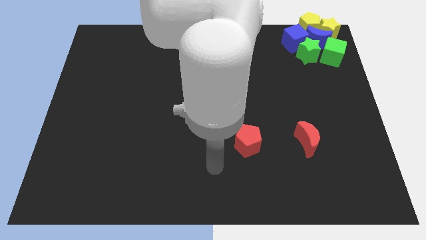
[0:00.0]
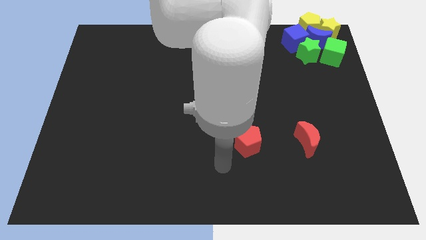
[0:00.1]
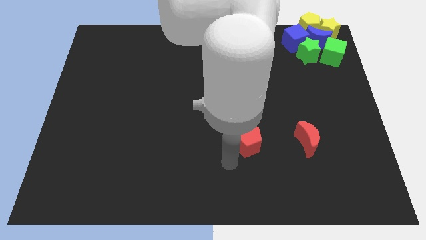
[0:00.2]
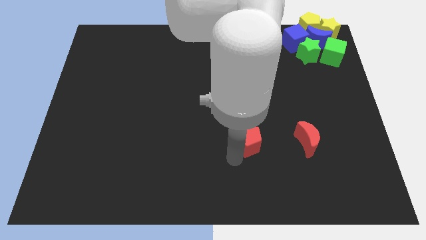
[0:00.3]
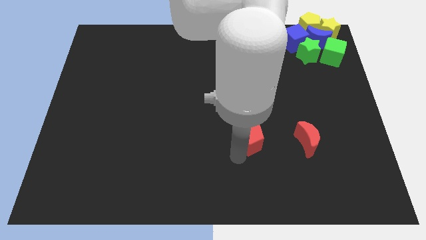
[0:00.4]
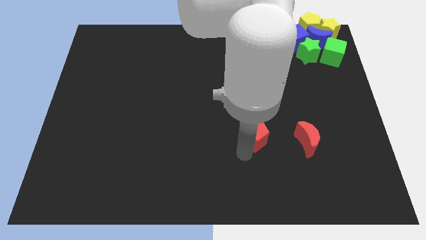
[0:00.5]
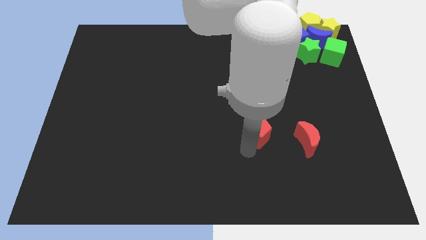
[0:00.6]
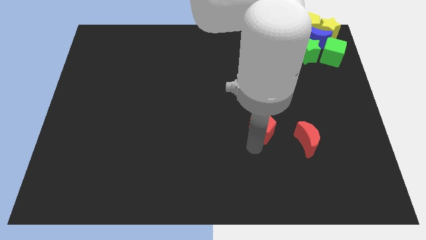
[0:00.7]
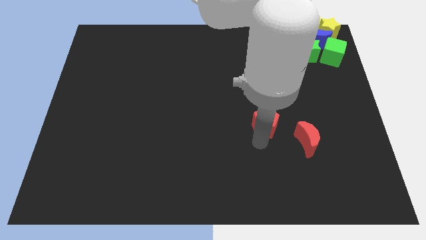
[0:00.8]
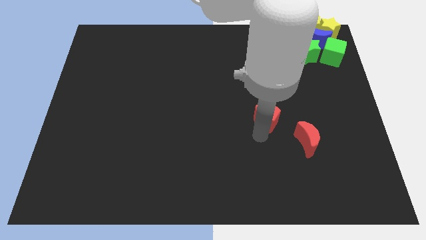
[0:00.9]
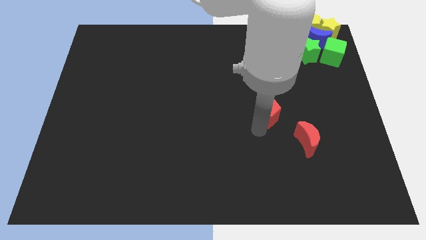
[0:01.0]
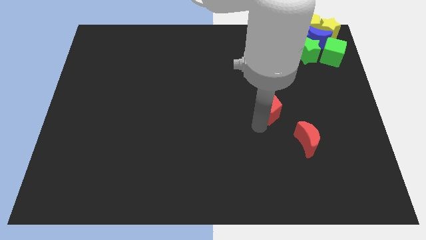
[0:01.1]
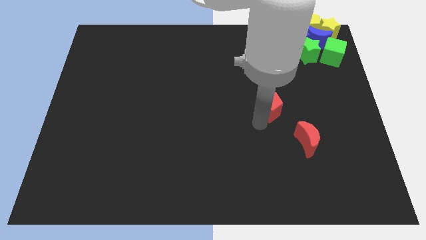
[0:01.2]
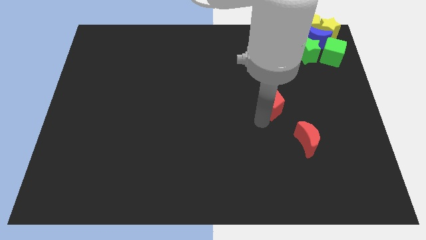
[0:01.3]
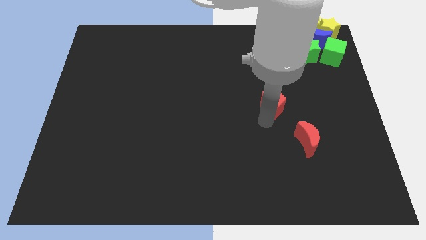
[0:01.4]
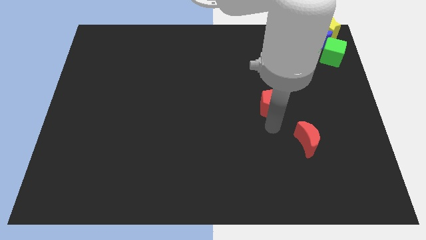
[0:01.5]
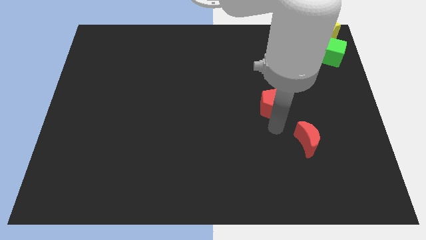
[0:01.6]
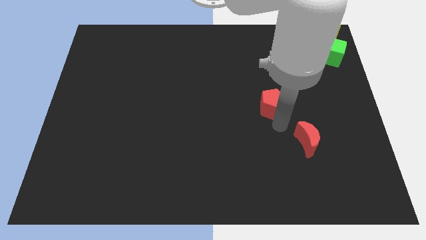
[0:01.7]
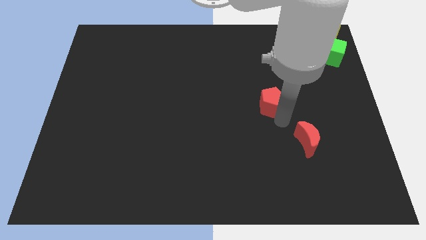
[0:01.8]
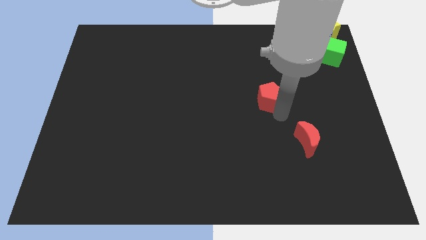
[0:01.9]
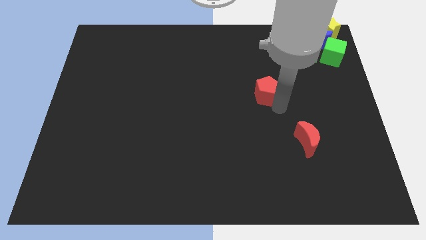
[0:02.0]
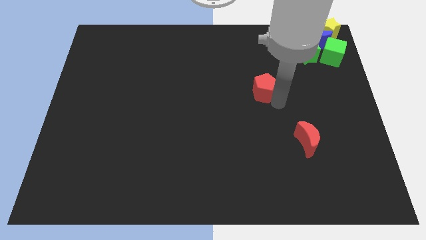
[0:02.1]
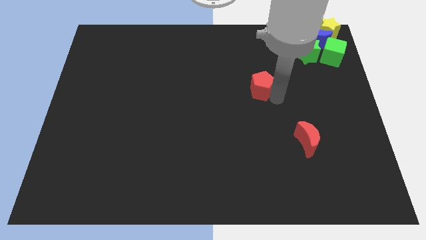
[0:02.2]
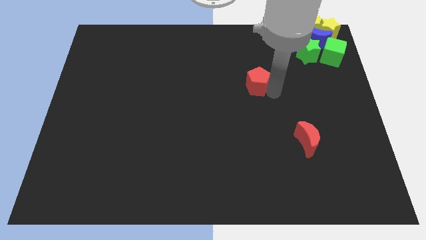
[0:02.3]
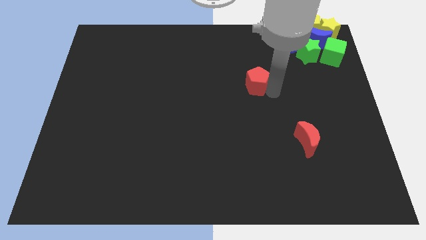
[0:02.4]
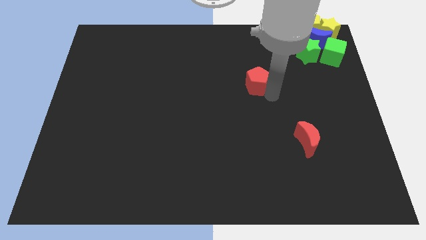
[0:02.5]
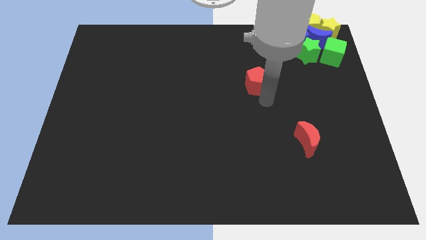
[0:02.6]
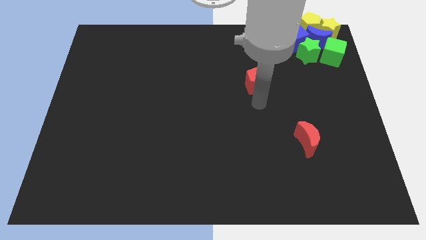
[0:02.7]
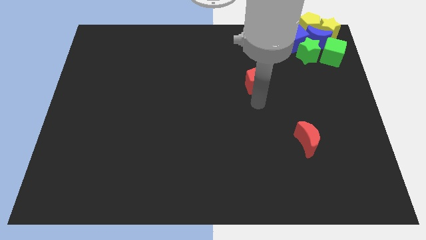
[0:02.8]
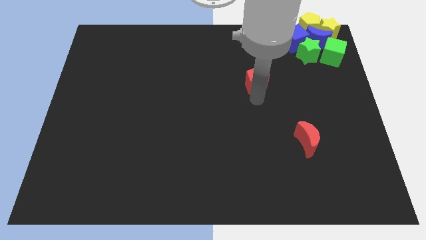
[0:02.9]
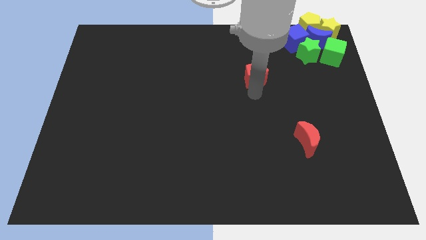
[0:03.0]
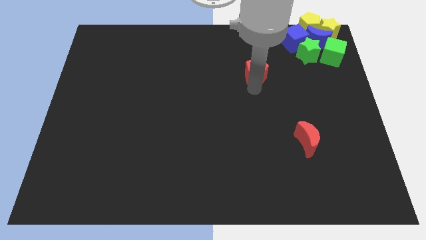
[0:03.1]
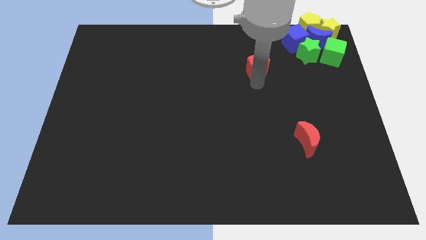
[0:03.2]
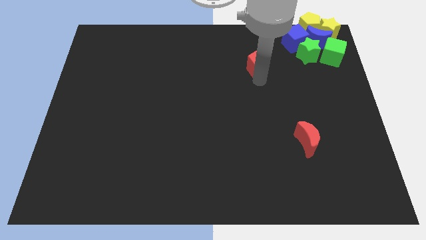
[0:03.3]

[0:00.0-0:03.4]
move red crescent upwards

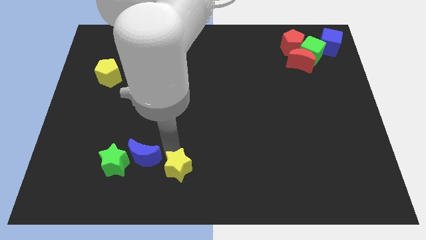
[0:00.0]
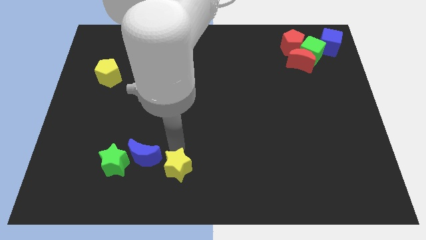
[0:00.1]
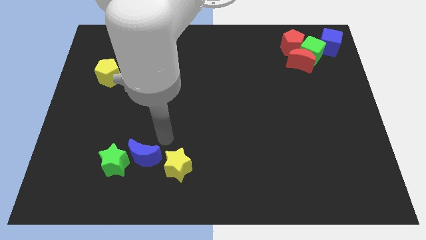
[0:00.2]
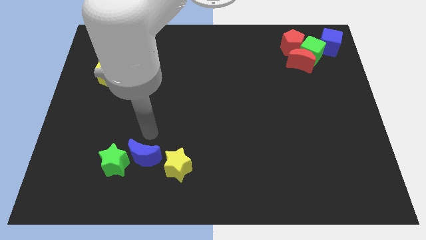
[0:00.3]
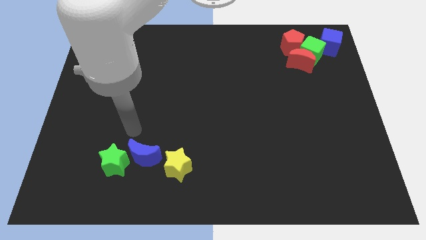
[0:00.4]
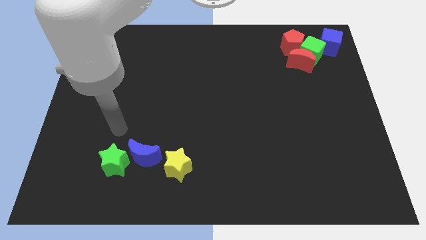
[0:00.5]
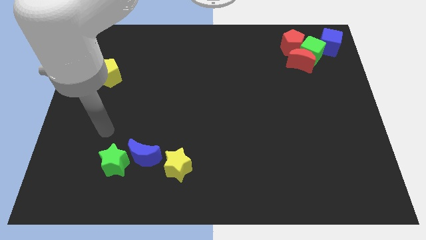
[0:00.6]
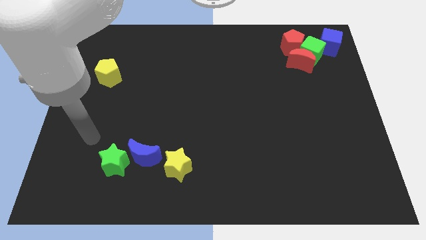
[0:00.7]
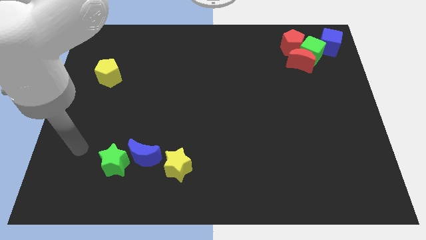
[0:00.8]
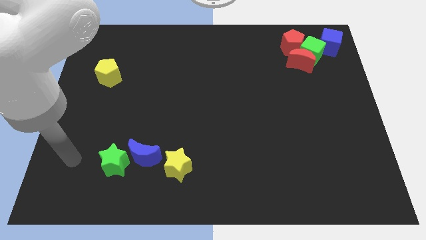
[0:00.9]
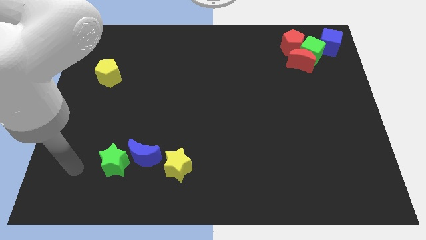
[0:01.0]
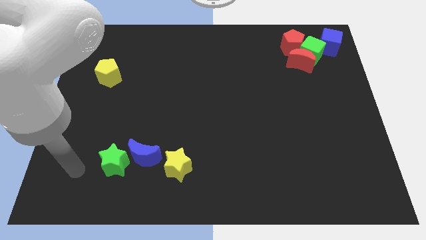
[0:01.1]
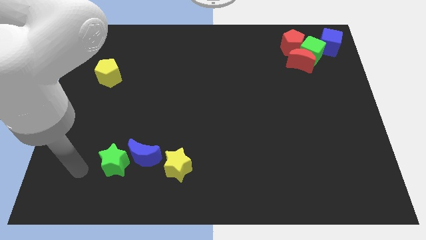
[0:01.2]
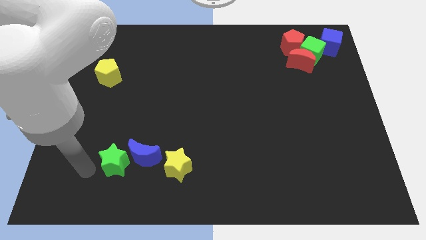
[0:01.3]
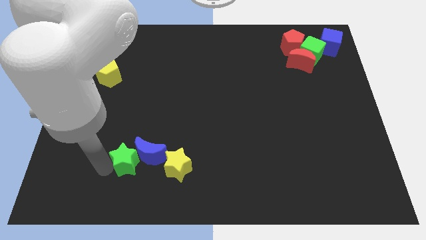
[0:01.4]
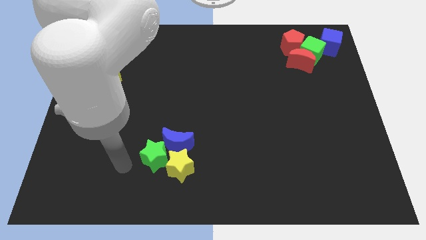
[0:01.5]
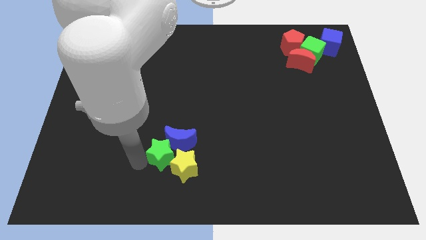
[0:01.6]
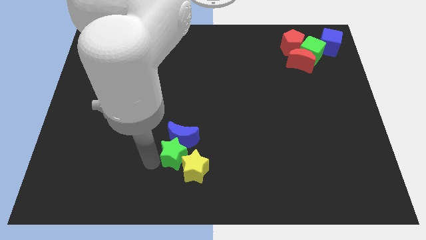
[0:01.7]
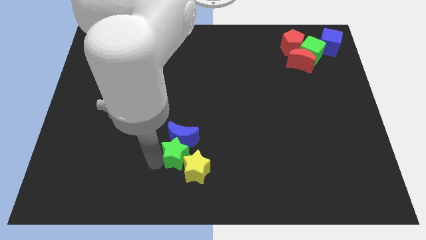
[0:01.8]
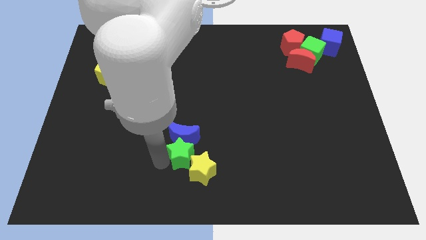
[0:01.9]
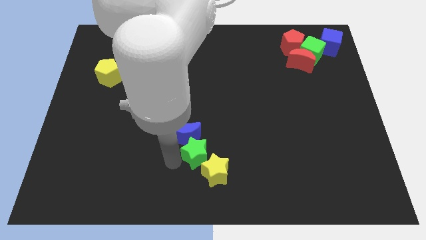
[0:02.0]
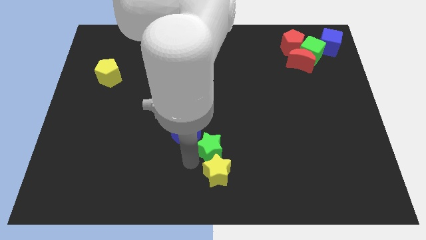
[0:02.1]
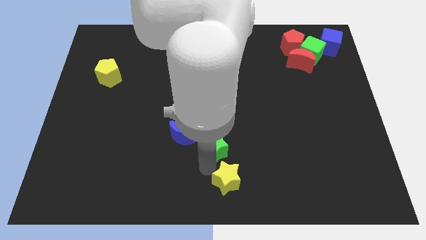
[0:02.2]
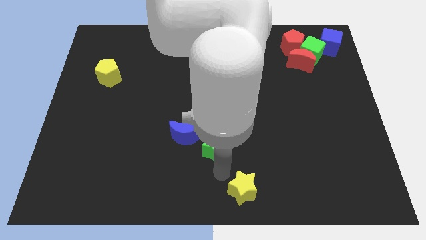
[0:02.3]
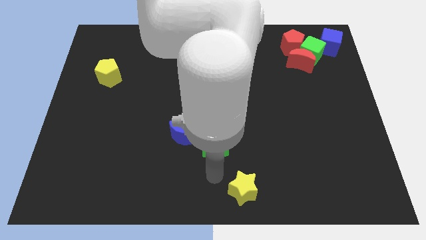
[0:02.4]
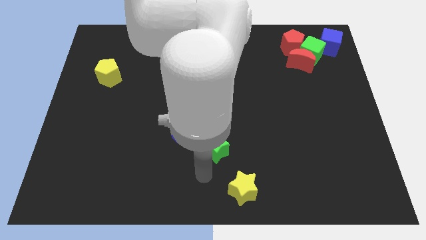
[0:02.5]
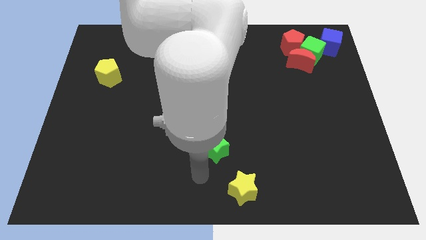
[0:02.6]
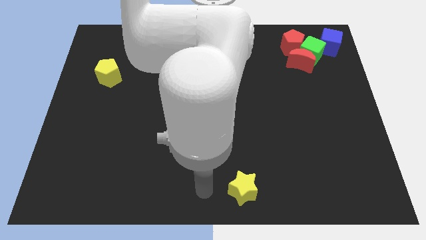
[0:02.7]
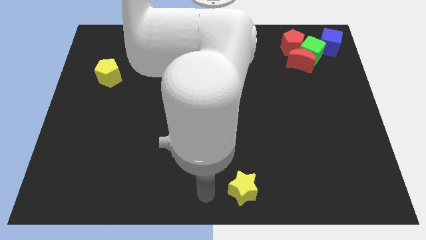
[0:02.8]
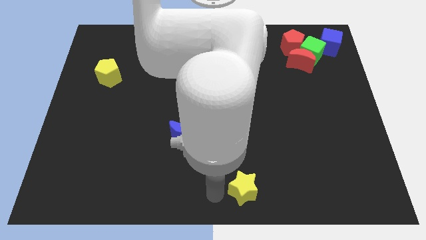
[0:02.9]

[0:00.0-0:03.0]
push the blue moon yellow star with green star towards the right

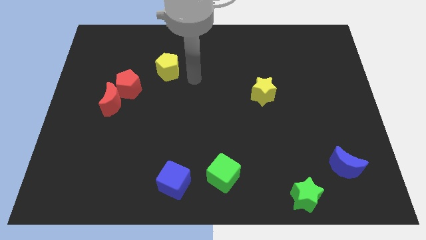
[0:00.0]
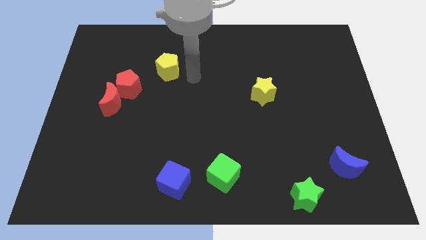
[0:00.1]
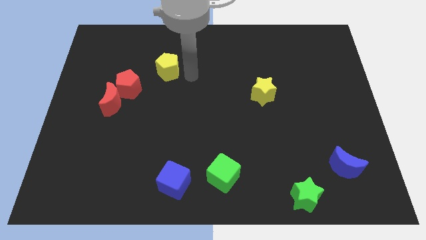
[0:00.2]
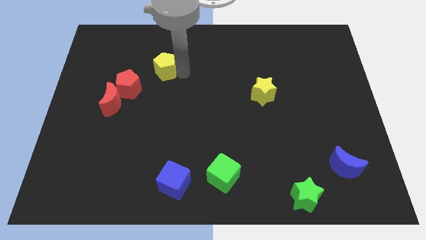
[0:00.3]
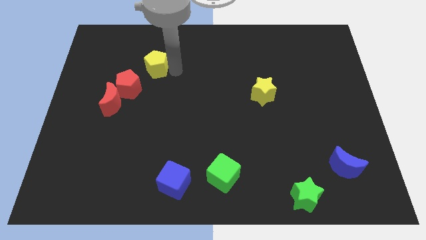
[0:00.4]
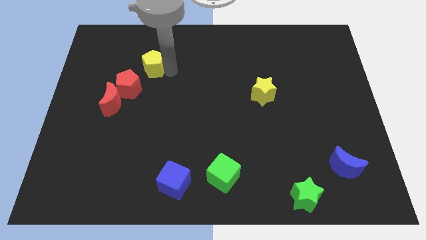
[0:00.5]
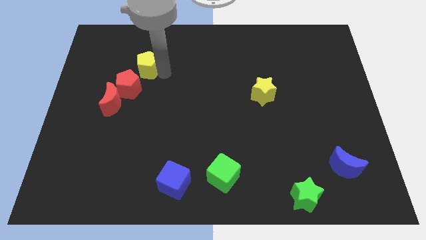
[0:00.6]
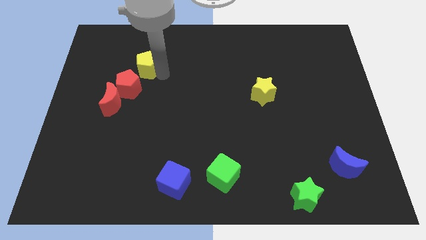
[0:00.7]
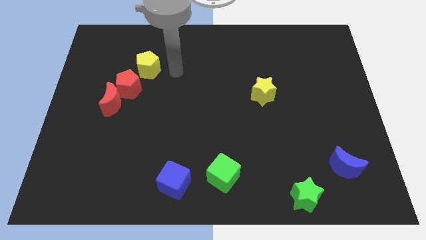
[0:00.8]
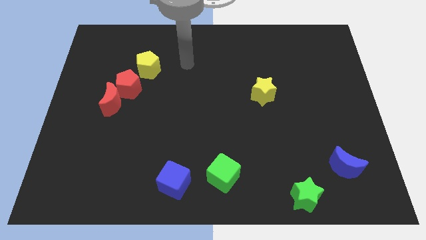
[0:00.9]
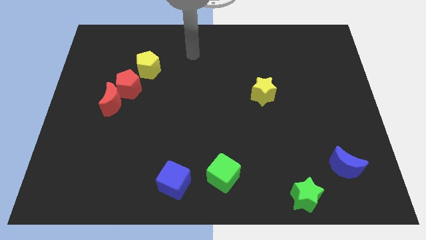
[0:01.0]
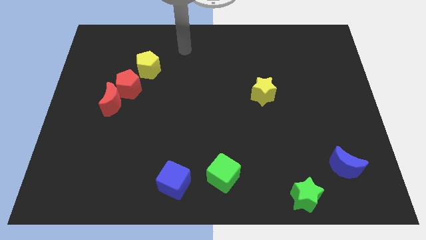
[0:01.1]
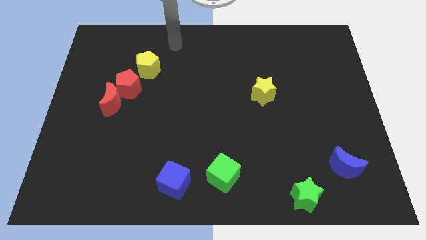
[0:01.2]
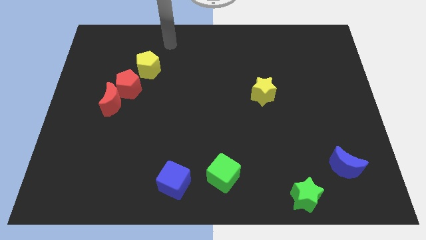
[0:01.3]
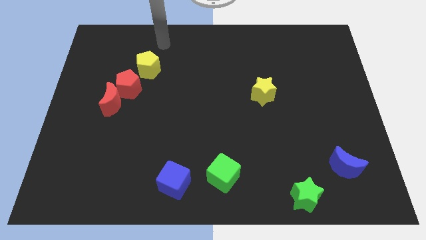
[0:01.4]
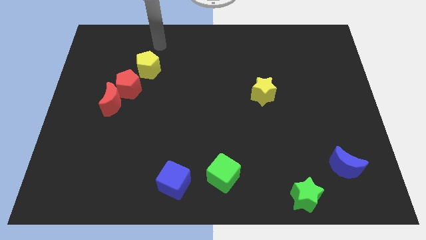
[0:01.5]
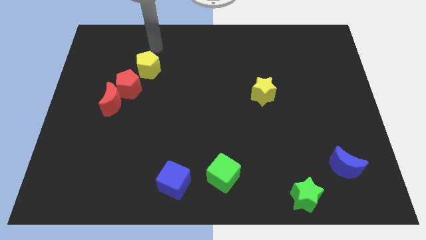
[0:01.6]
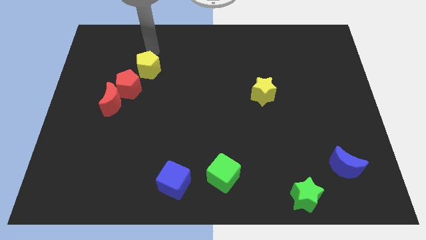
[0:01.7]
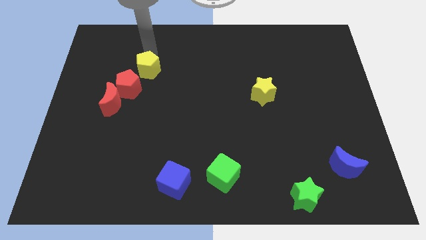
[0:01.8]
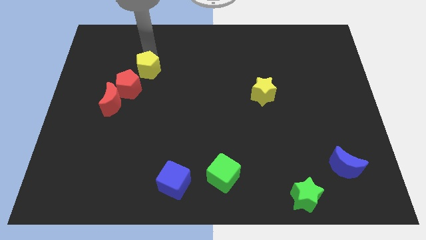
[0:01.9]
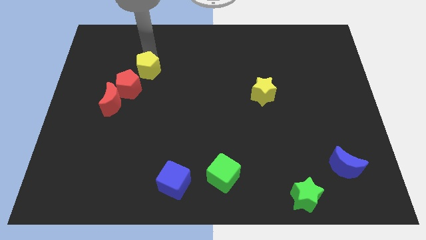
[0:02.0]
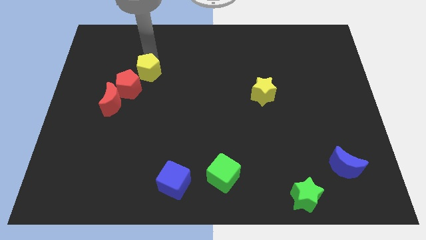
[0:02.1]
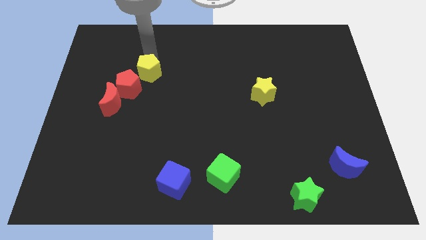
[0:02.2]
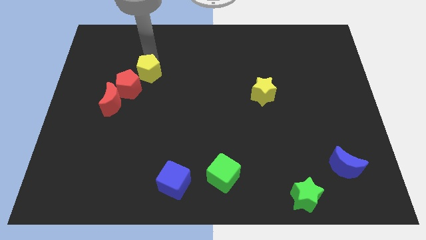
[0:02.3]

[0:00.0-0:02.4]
place the yellow pentagon at the right top of the red pentagon

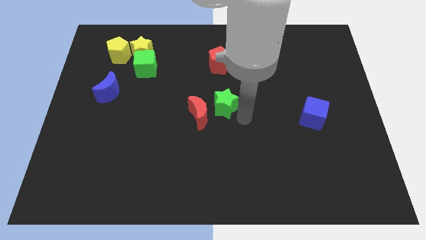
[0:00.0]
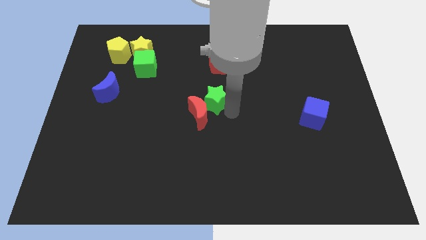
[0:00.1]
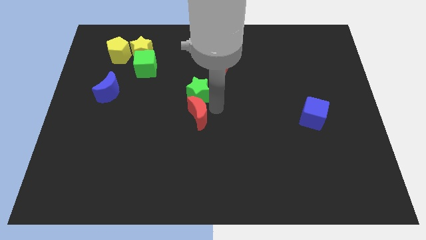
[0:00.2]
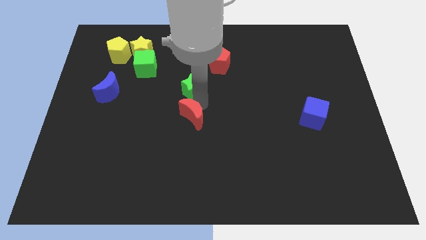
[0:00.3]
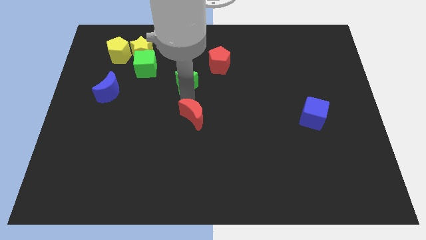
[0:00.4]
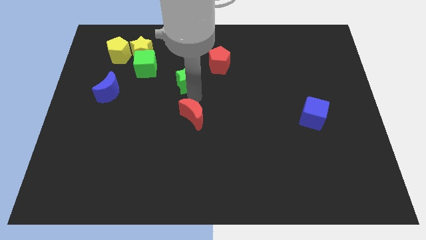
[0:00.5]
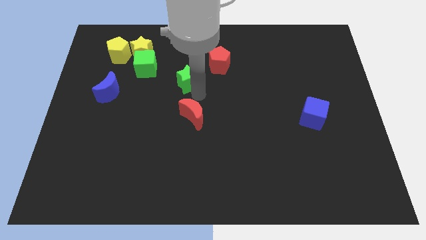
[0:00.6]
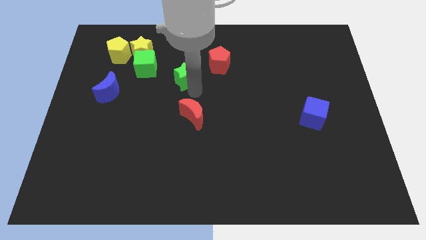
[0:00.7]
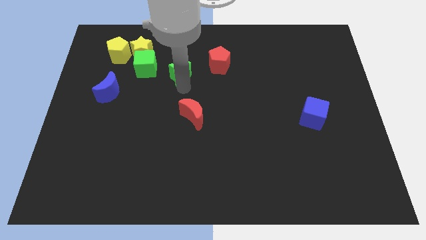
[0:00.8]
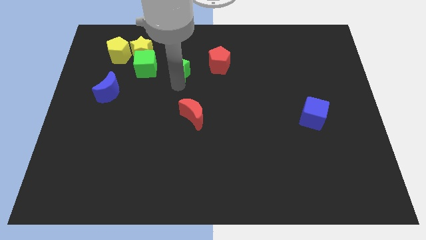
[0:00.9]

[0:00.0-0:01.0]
drag the green star slightly upwards
